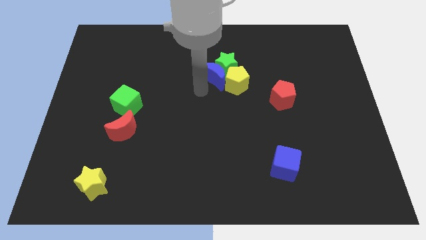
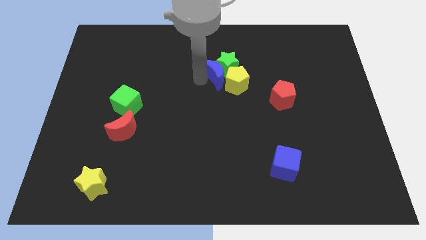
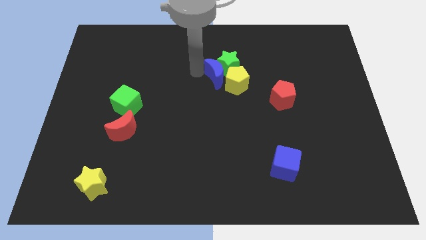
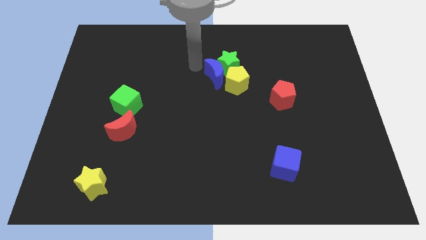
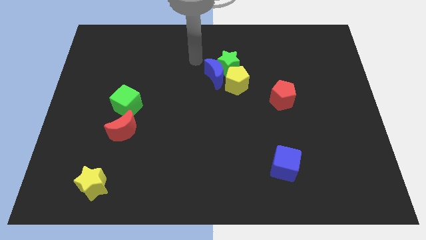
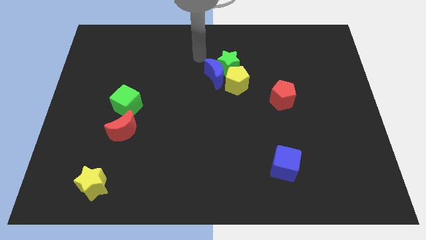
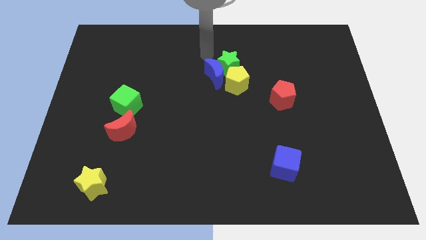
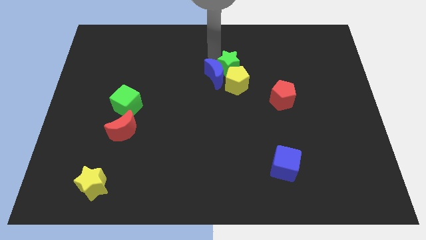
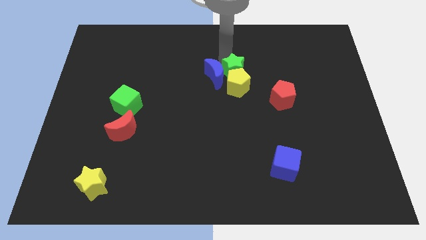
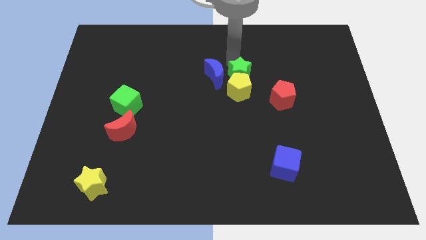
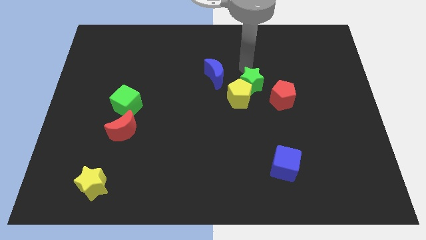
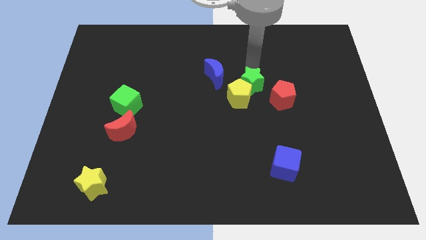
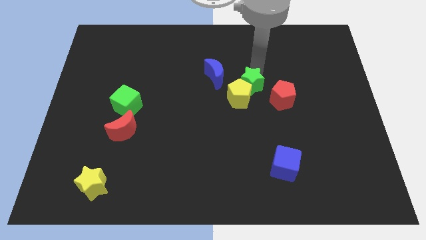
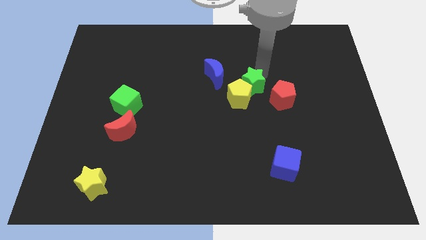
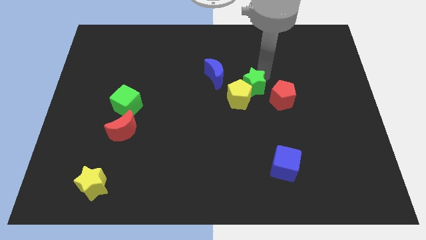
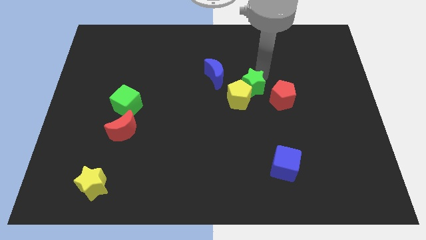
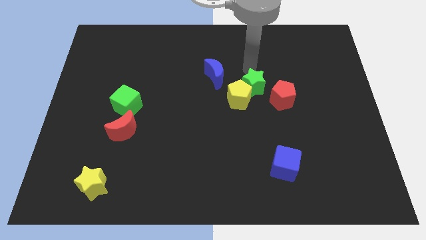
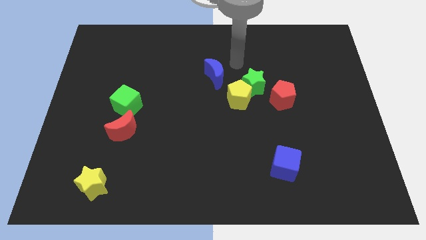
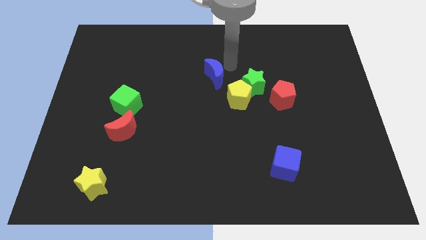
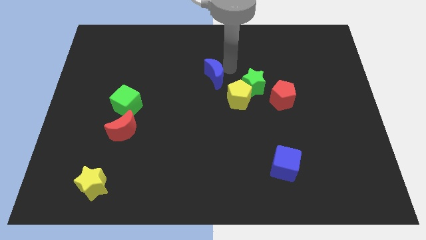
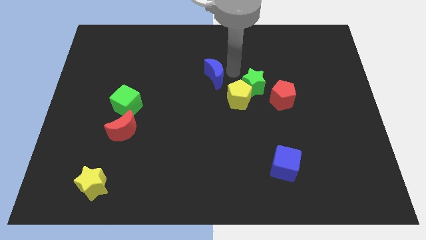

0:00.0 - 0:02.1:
push the green star into the yellow pentagon

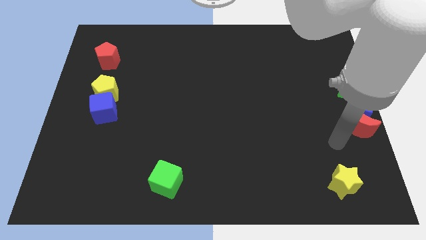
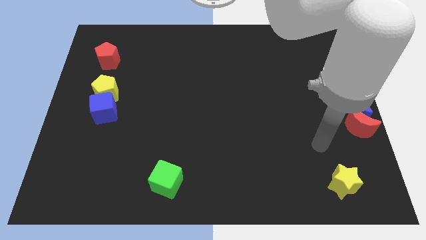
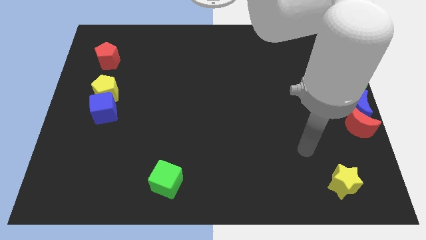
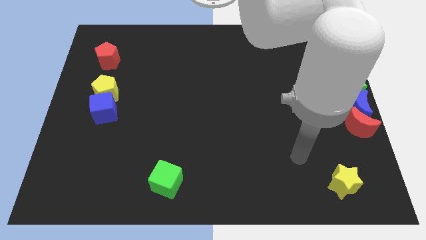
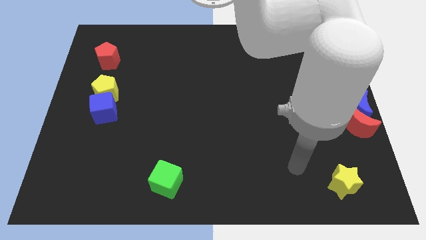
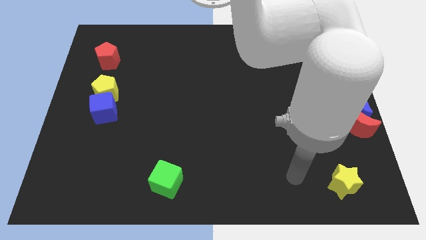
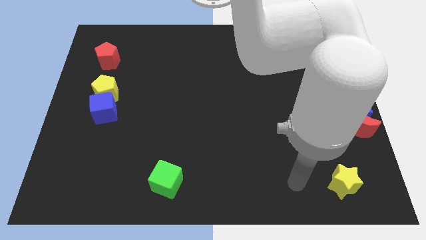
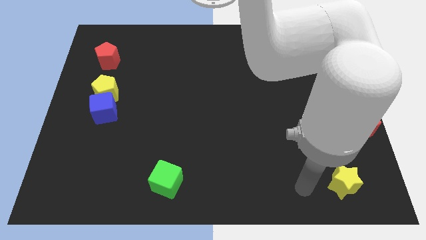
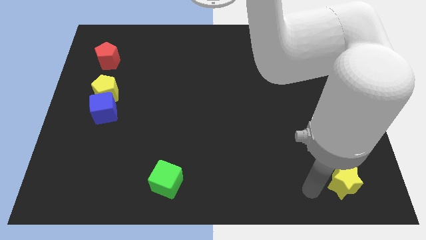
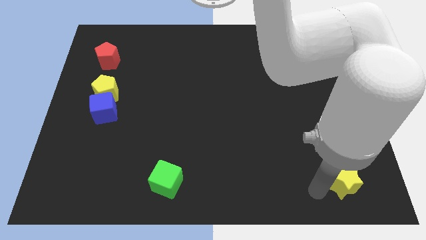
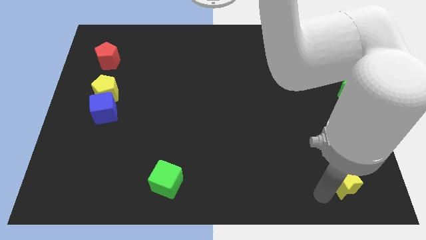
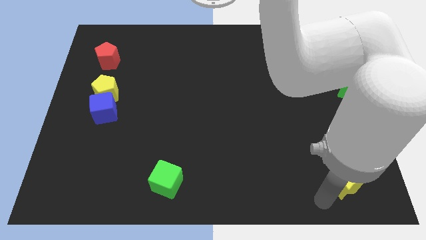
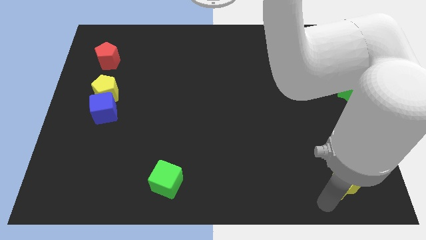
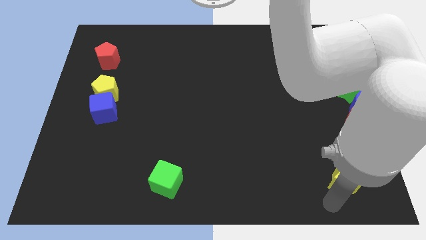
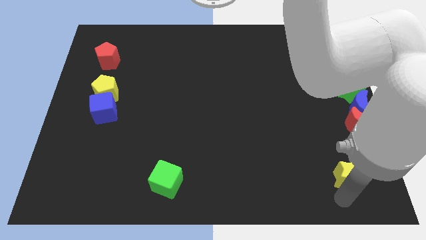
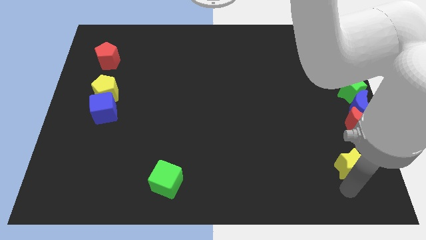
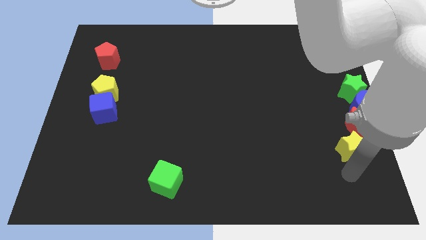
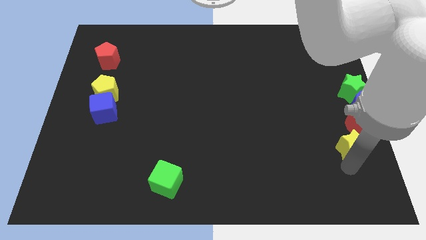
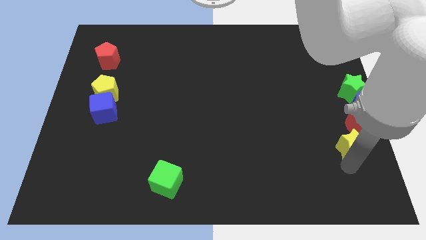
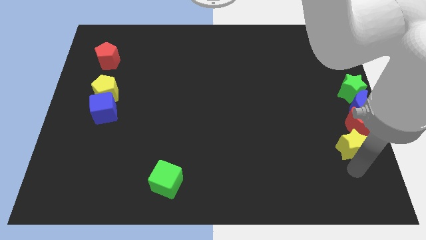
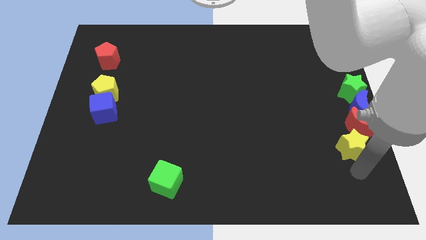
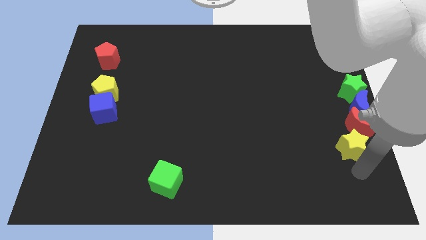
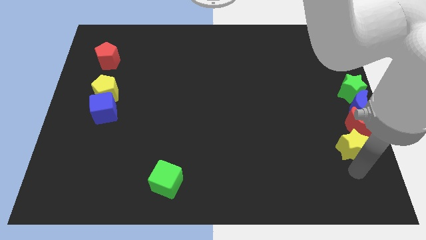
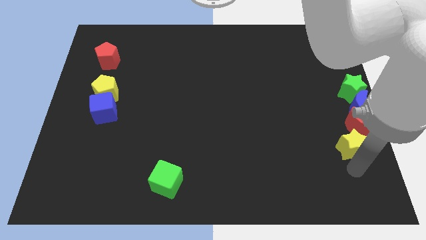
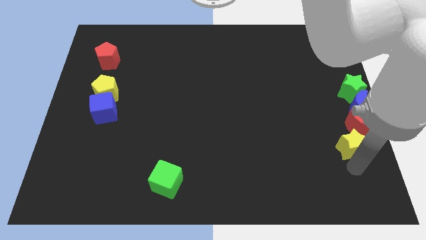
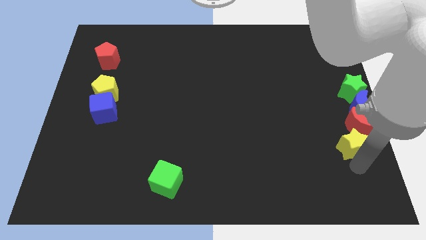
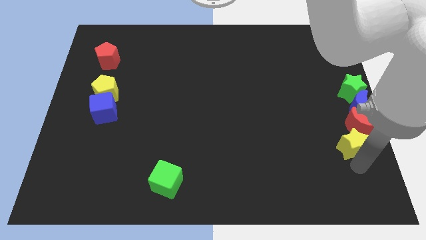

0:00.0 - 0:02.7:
move the yellow star to the bottom left to the red crescent

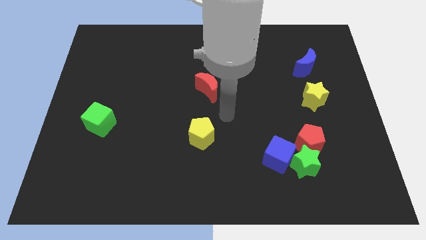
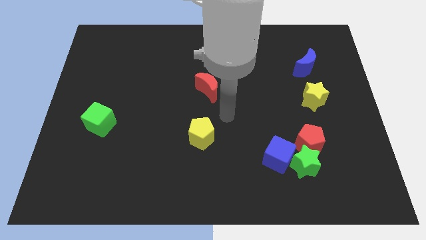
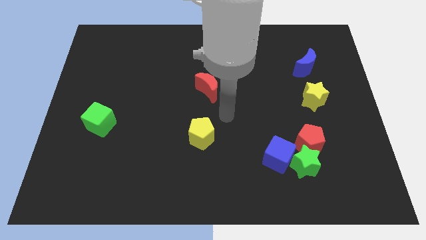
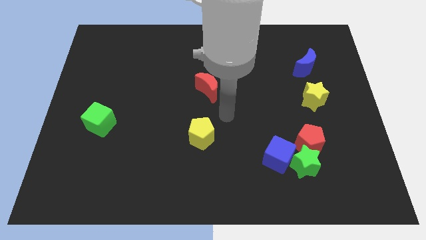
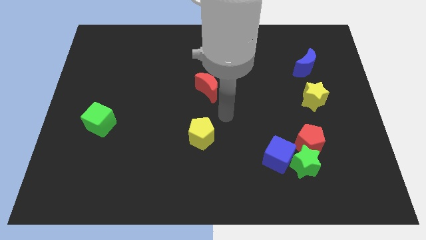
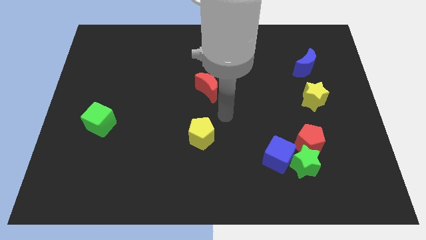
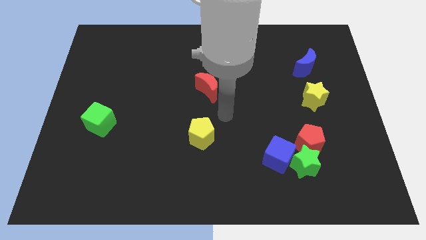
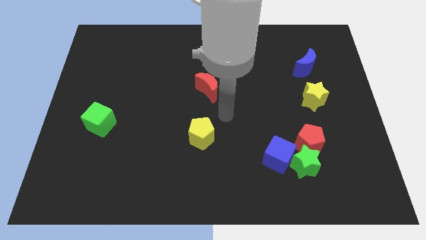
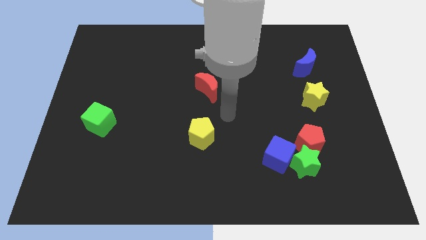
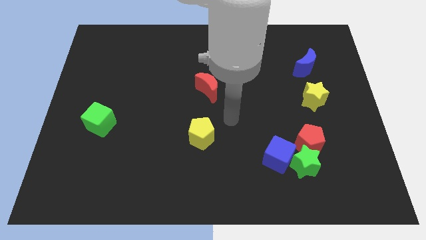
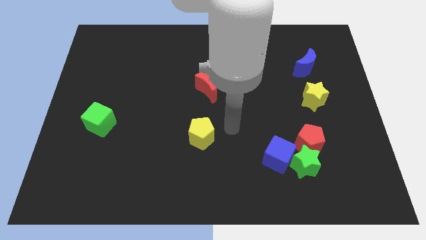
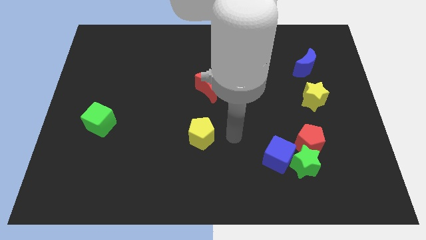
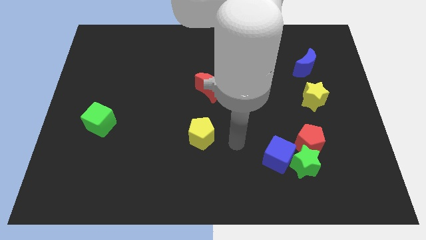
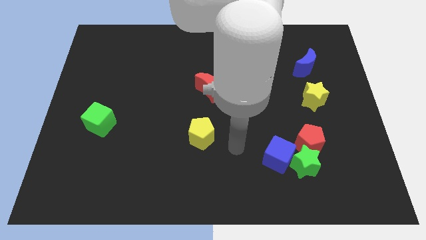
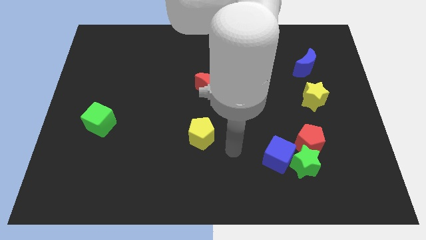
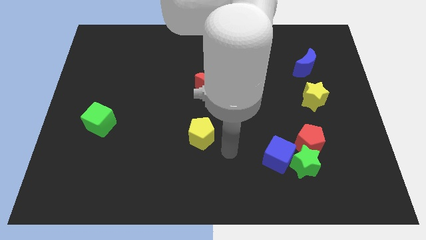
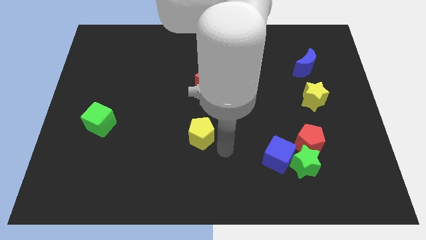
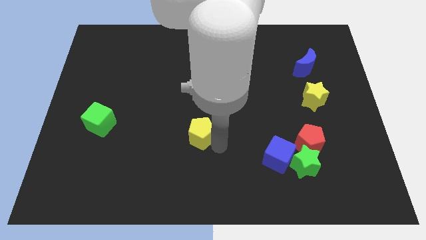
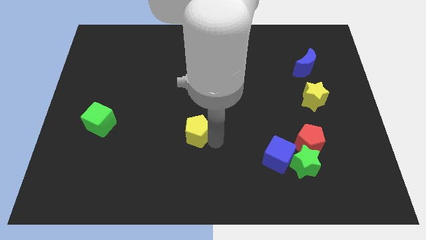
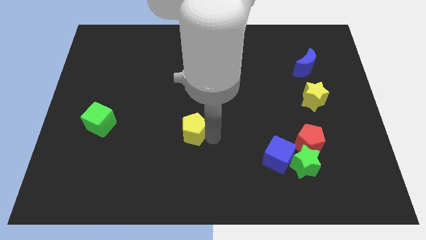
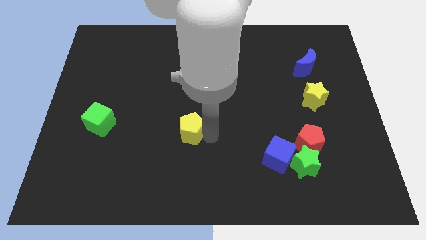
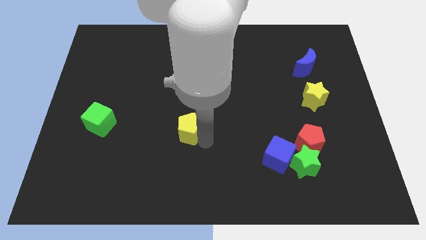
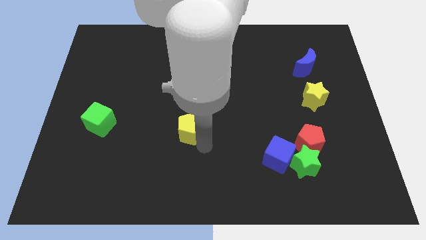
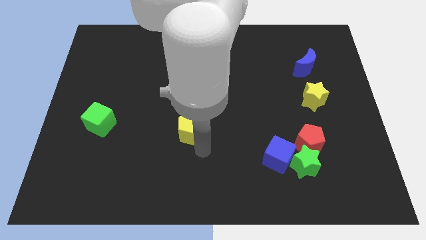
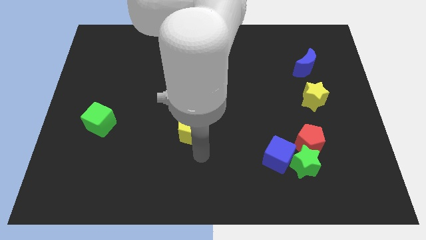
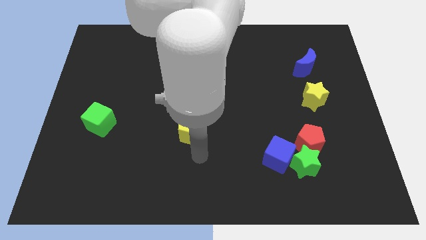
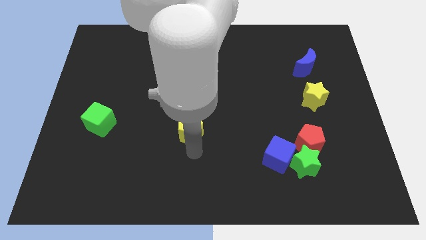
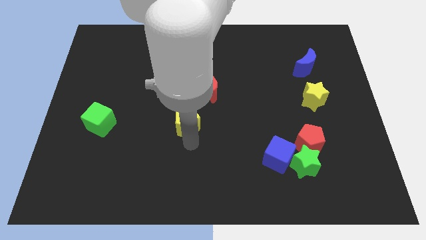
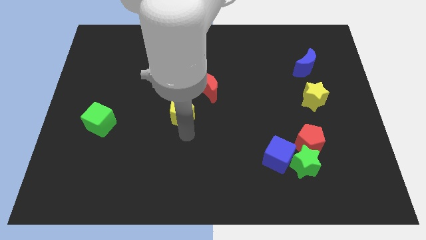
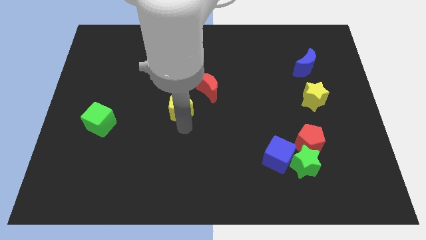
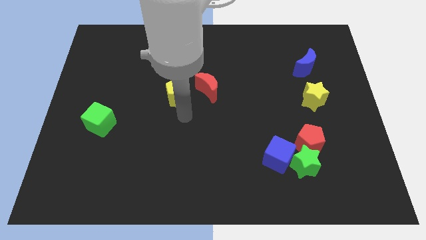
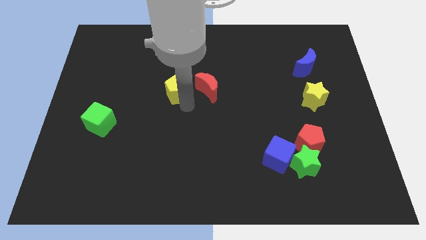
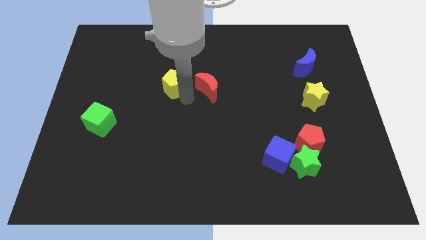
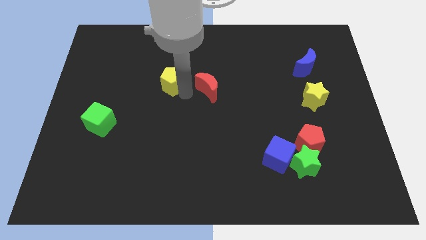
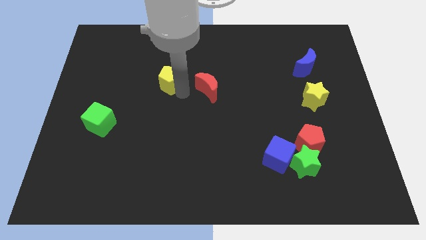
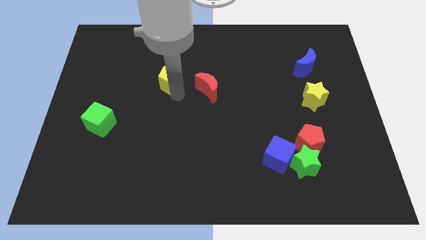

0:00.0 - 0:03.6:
move the yellow pentagon to the left of the red crescent

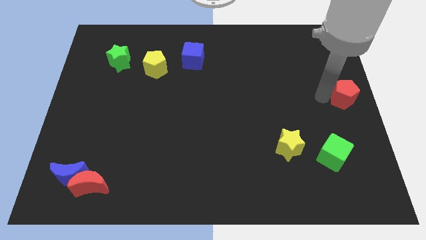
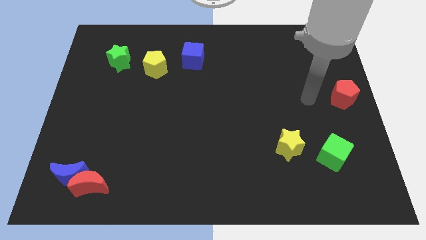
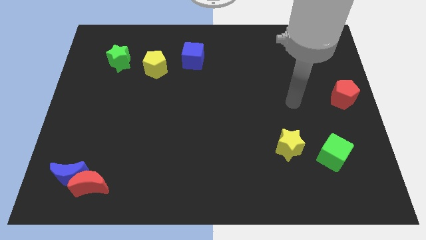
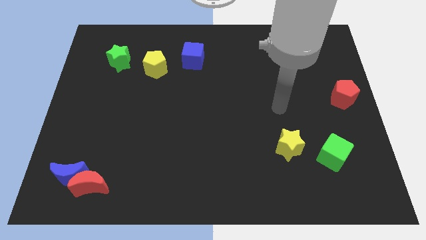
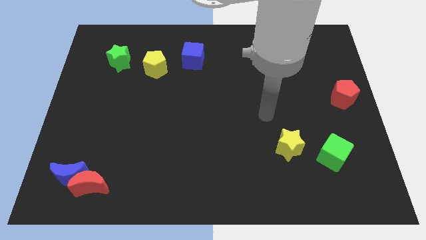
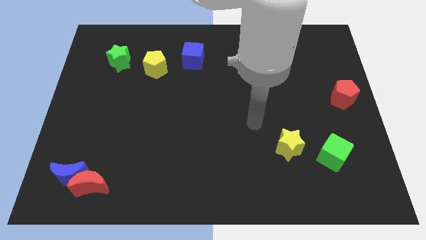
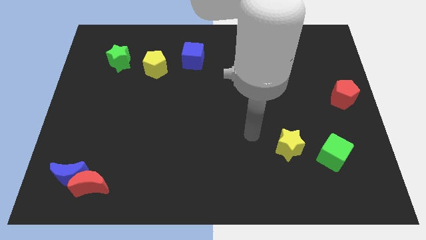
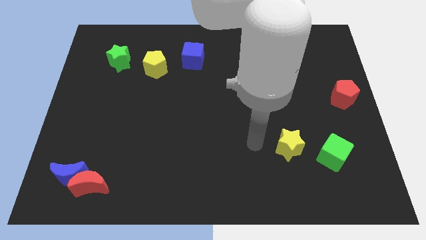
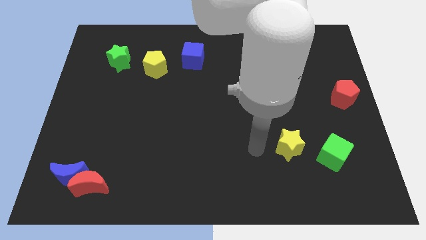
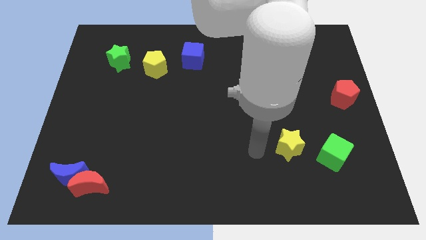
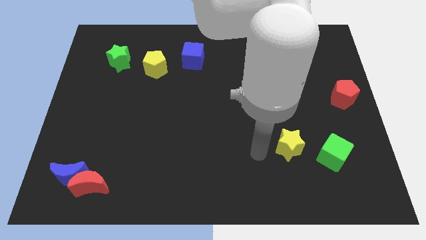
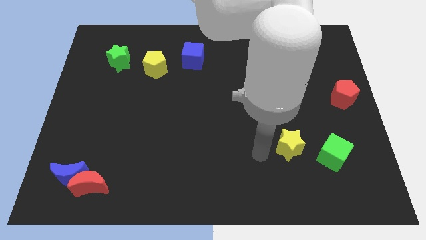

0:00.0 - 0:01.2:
move your arm away from red pentagon
